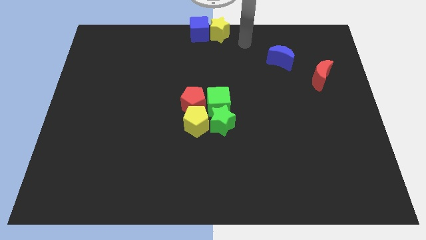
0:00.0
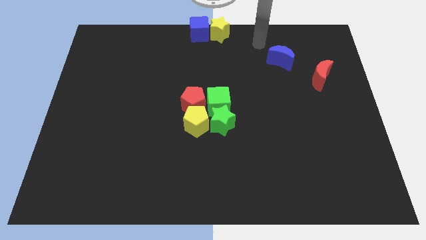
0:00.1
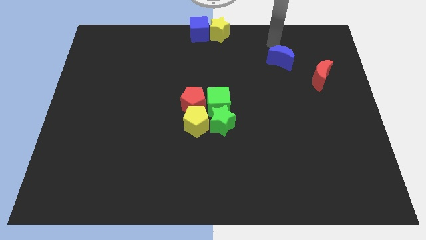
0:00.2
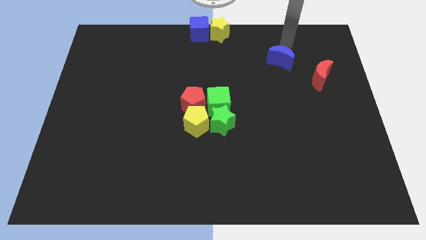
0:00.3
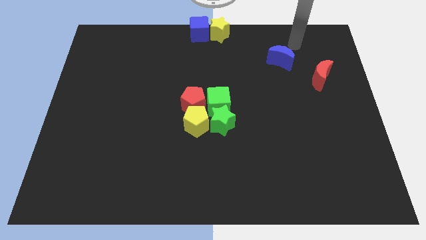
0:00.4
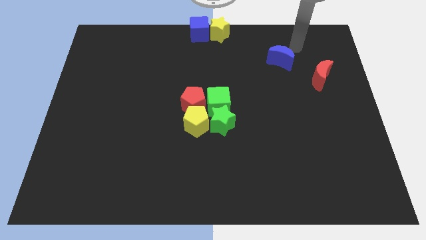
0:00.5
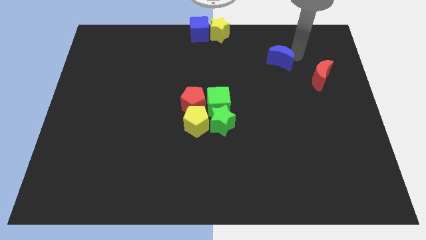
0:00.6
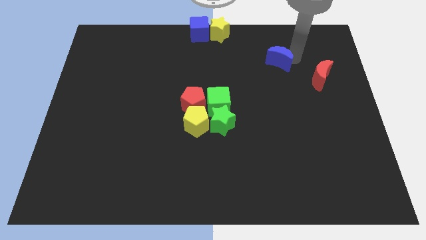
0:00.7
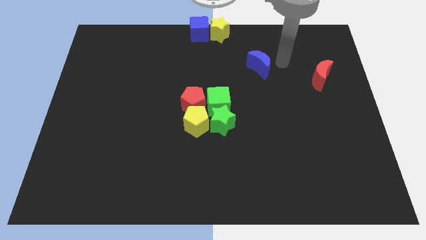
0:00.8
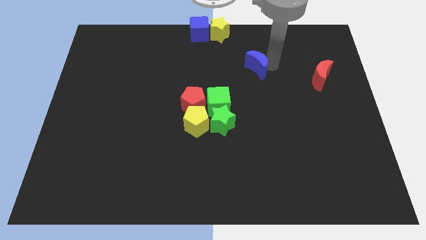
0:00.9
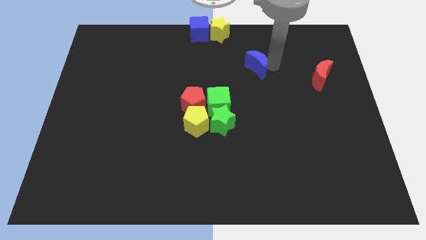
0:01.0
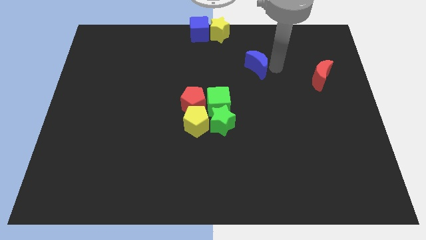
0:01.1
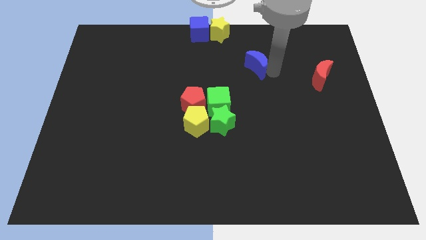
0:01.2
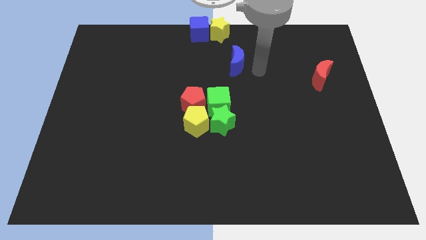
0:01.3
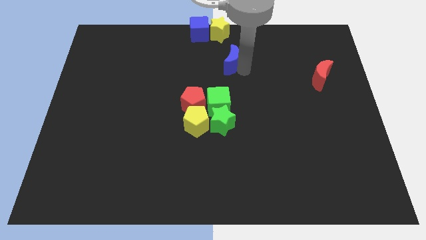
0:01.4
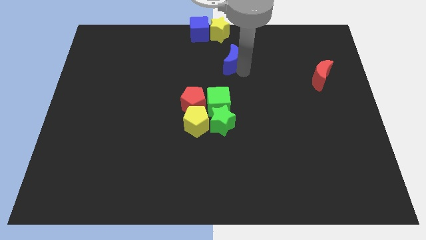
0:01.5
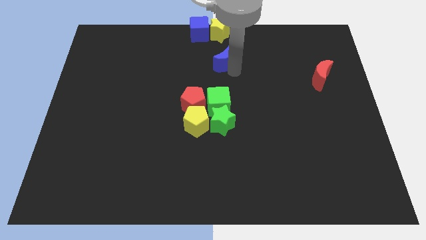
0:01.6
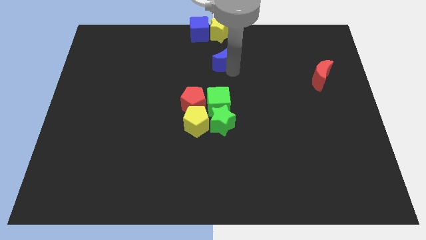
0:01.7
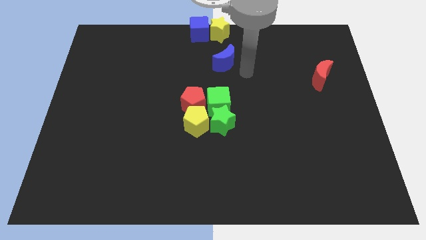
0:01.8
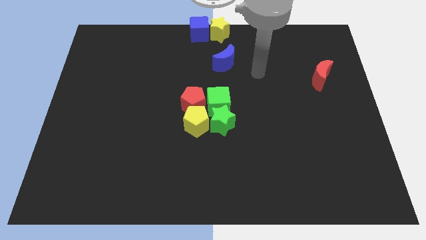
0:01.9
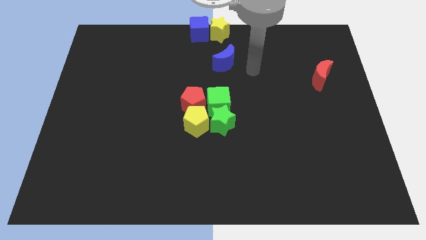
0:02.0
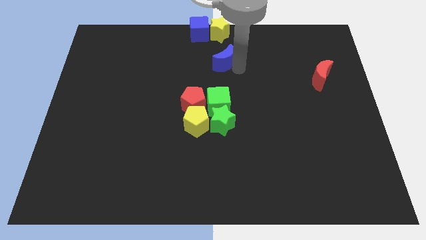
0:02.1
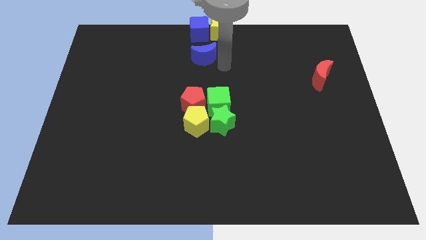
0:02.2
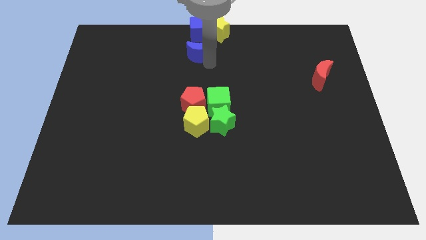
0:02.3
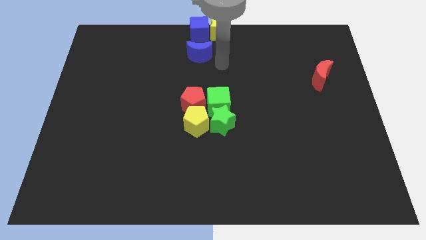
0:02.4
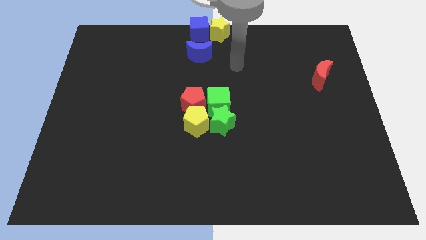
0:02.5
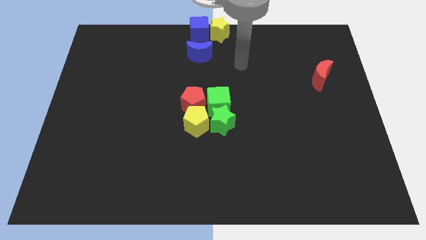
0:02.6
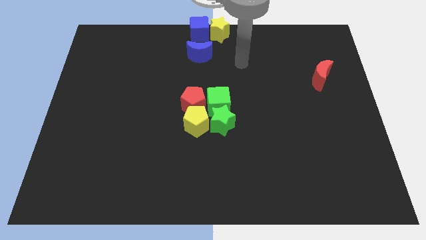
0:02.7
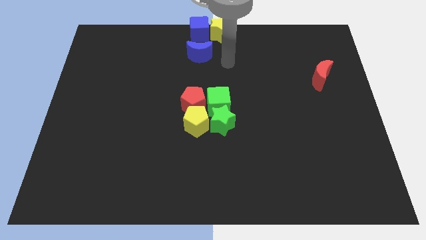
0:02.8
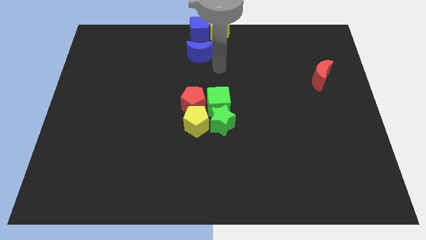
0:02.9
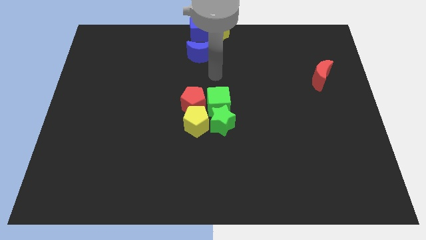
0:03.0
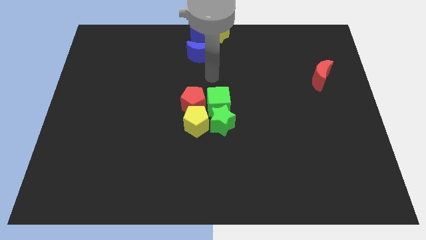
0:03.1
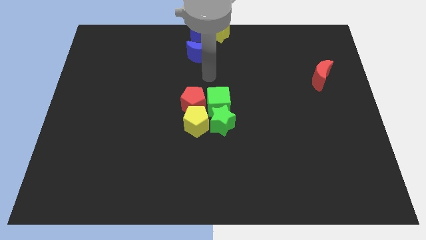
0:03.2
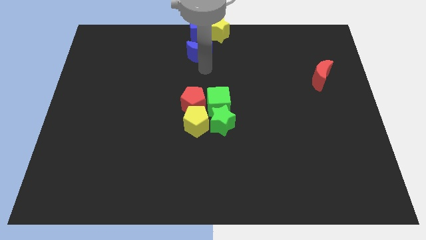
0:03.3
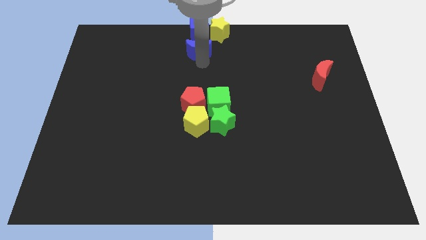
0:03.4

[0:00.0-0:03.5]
move the blue crescent below the blue cube

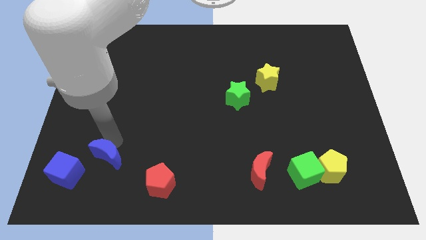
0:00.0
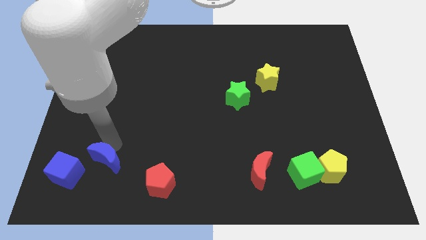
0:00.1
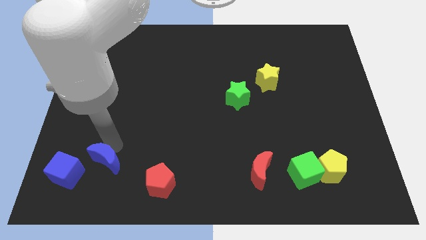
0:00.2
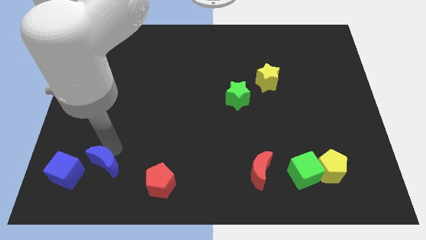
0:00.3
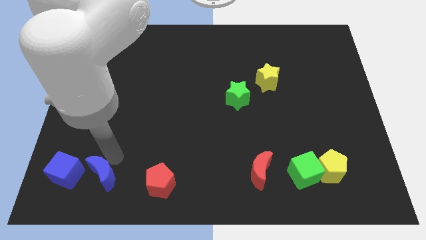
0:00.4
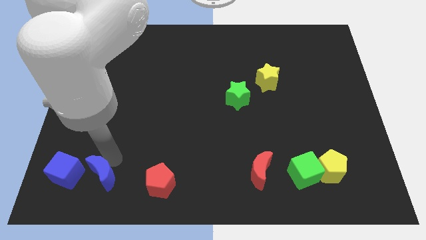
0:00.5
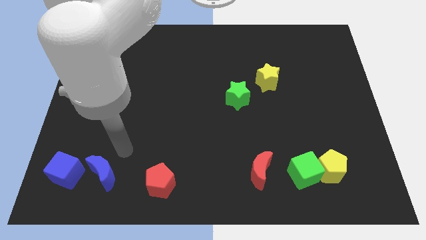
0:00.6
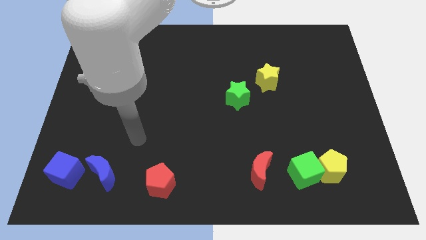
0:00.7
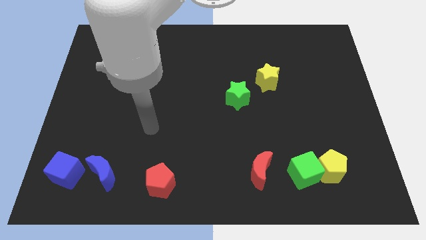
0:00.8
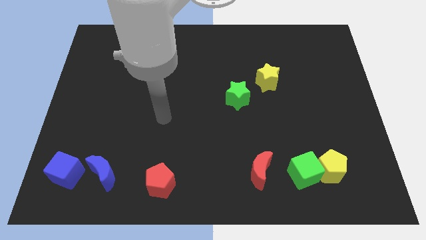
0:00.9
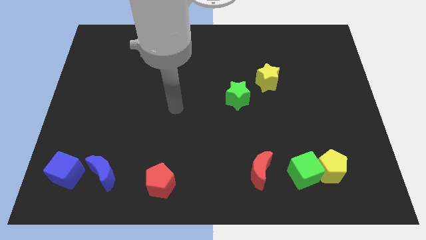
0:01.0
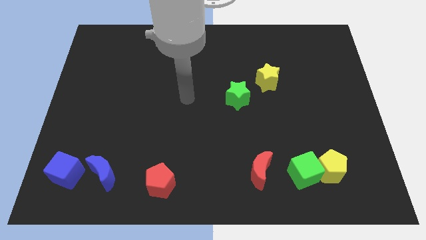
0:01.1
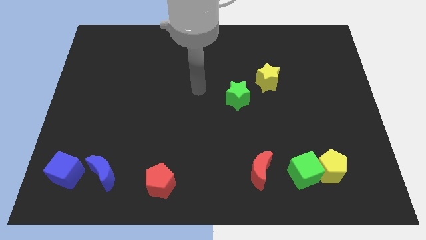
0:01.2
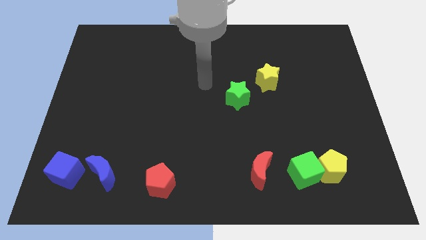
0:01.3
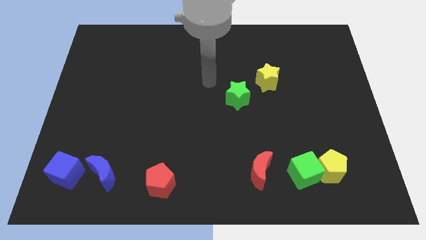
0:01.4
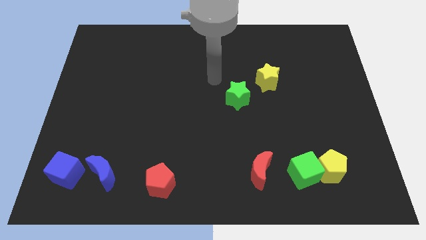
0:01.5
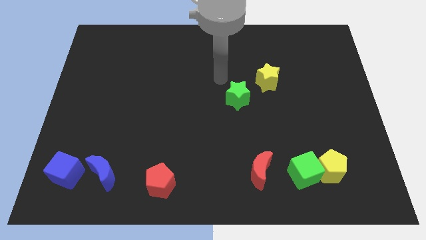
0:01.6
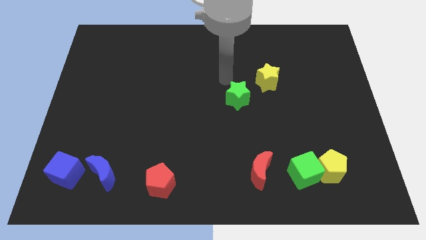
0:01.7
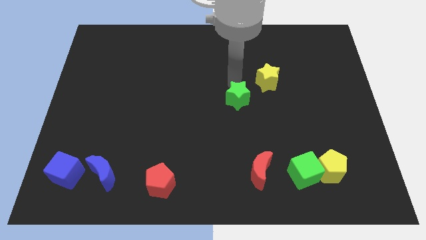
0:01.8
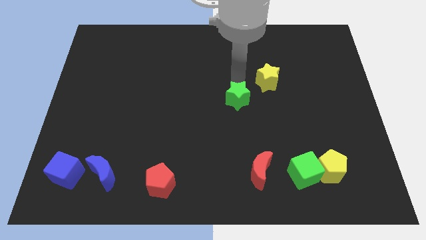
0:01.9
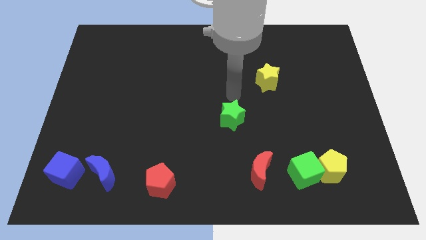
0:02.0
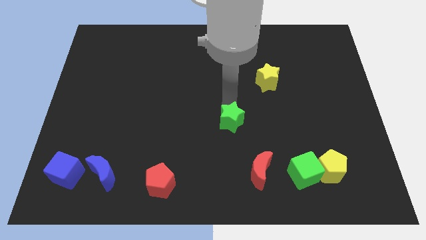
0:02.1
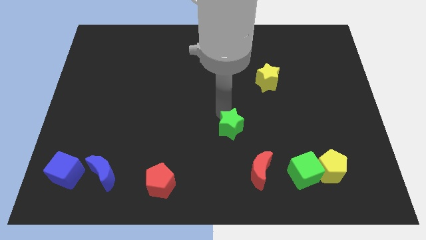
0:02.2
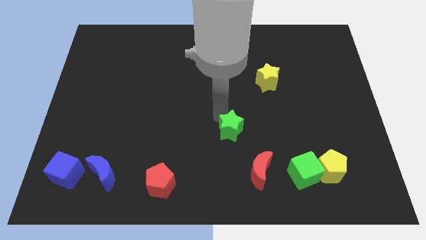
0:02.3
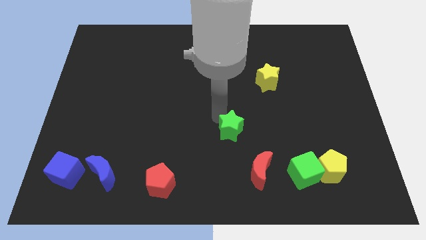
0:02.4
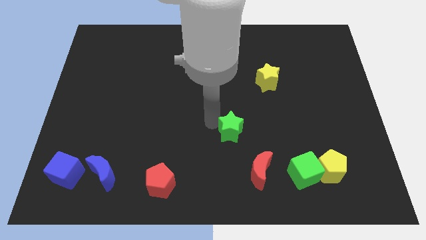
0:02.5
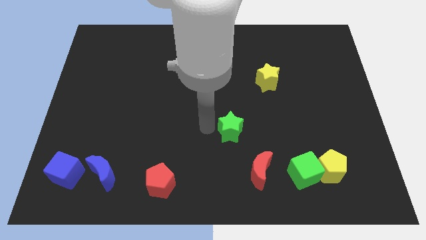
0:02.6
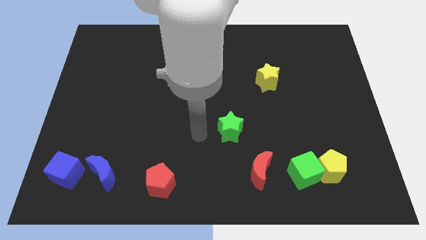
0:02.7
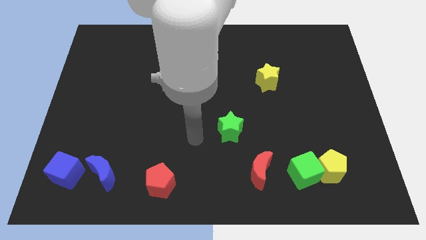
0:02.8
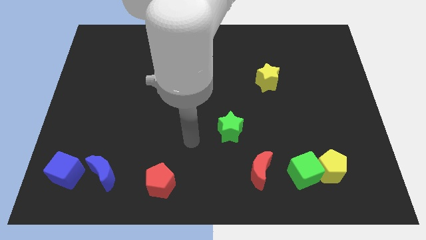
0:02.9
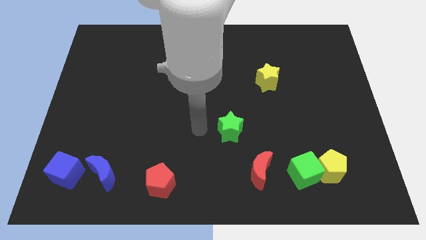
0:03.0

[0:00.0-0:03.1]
place the green star diagonally top left to the red moon

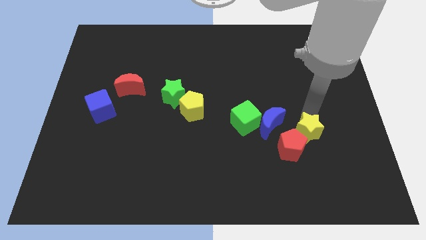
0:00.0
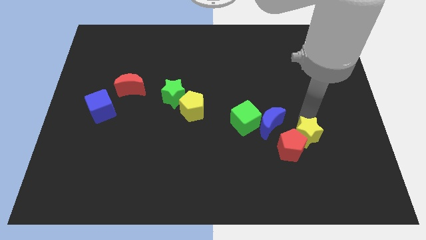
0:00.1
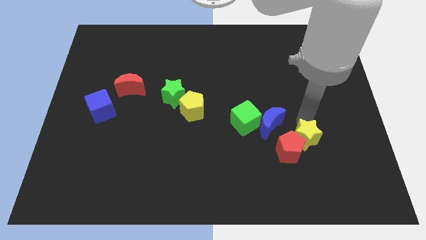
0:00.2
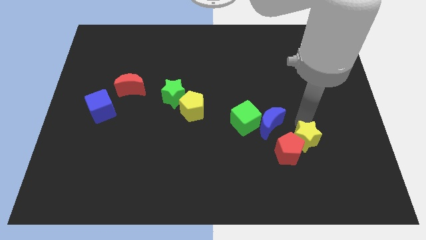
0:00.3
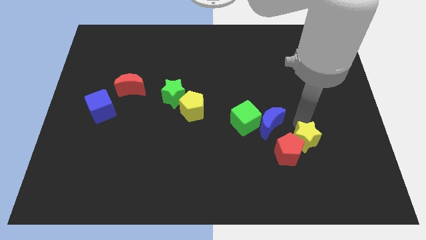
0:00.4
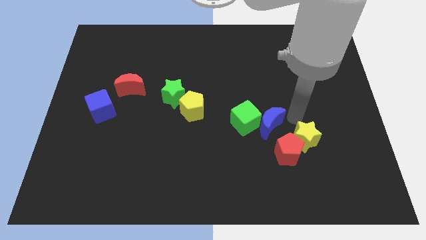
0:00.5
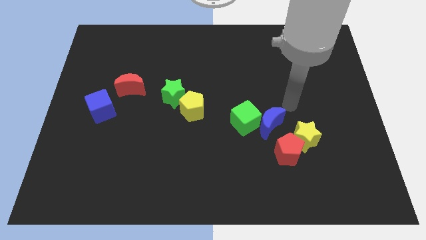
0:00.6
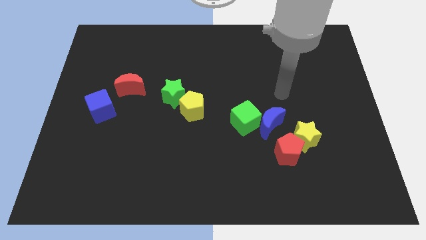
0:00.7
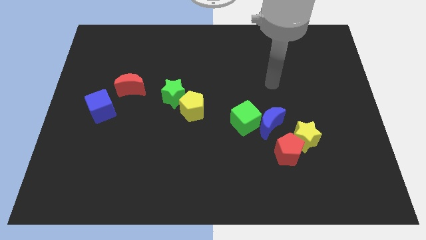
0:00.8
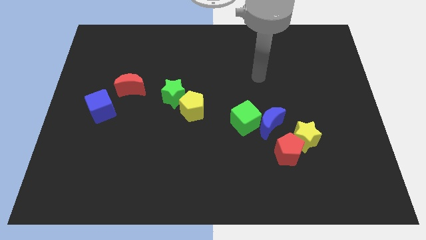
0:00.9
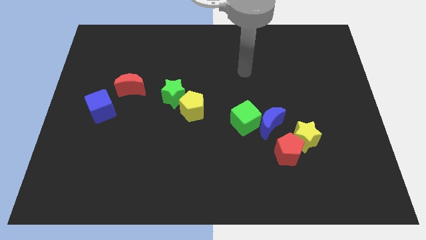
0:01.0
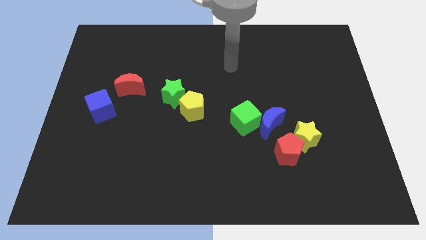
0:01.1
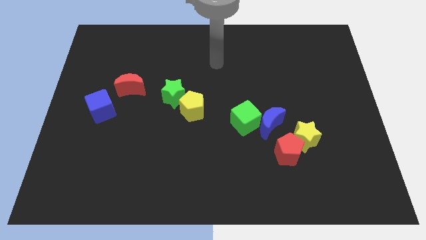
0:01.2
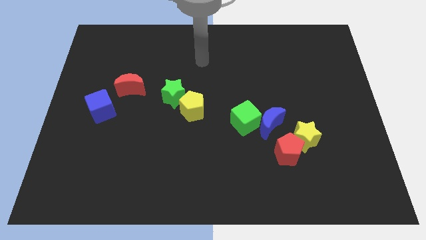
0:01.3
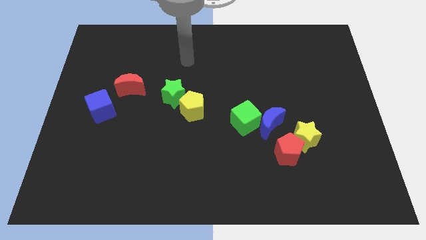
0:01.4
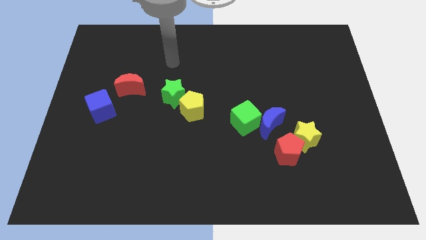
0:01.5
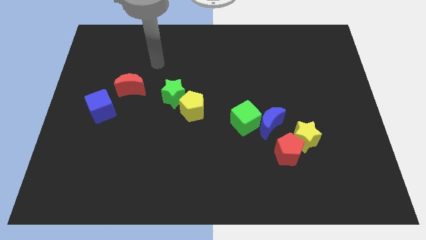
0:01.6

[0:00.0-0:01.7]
push the yellow star into the red pentagon

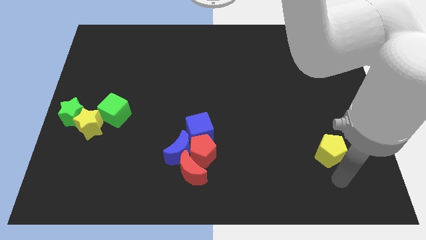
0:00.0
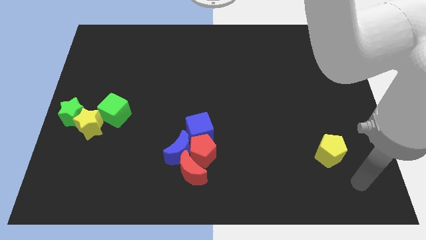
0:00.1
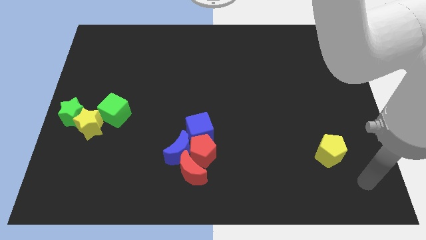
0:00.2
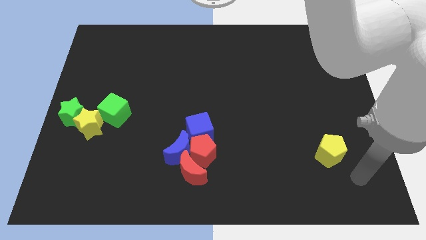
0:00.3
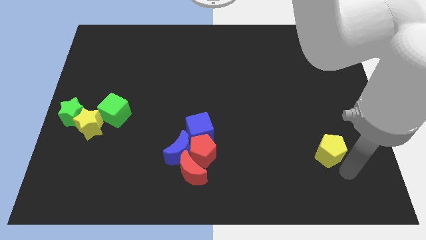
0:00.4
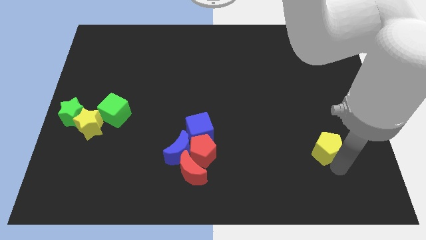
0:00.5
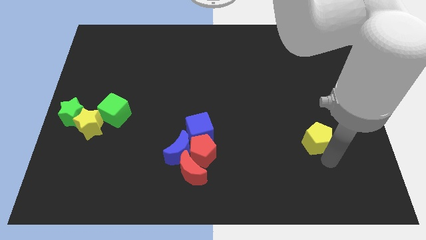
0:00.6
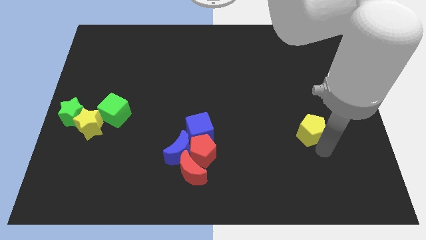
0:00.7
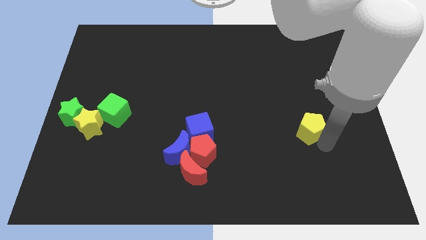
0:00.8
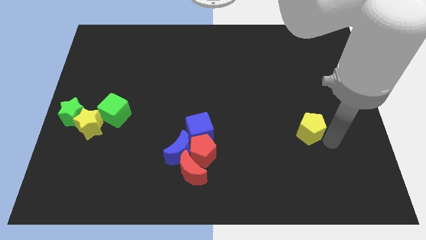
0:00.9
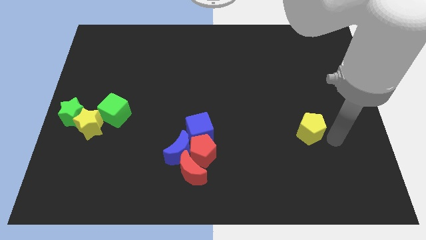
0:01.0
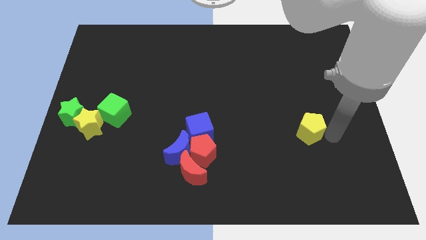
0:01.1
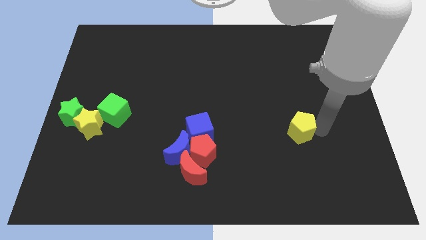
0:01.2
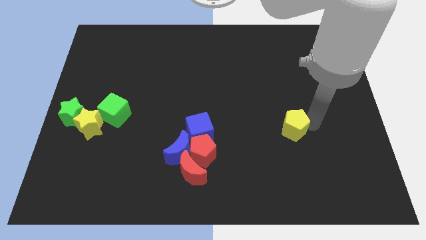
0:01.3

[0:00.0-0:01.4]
move the yellow pentagon parallel to the right of the blue cube
